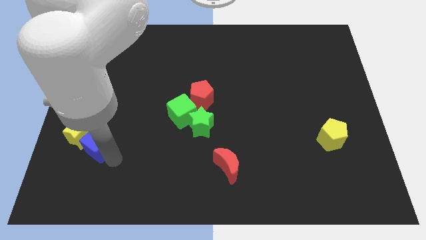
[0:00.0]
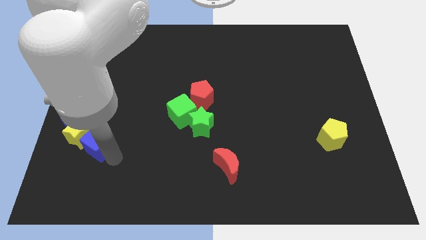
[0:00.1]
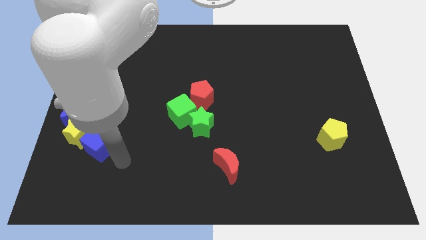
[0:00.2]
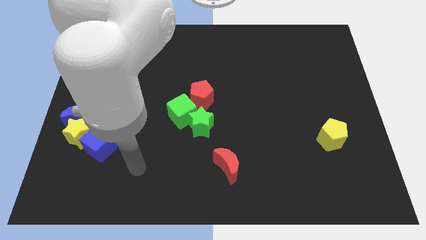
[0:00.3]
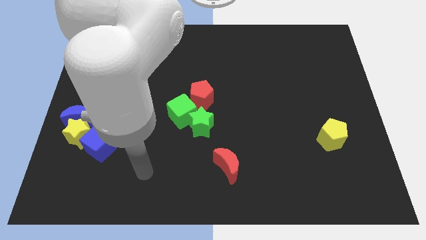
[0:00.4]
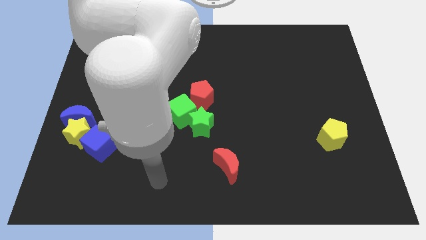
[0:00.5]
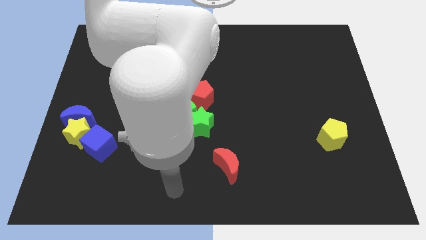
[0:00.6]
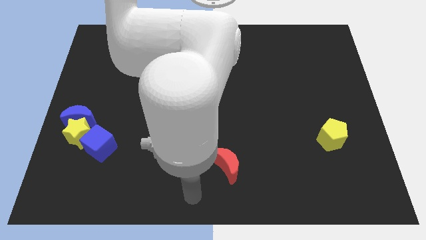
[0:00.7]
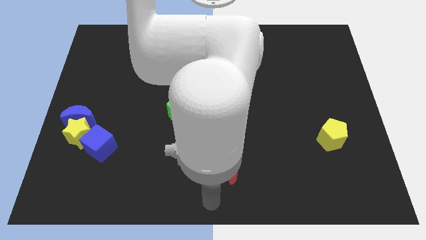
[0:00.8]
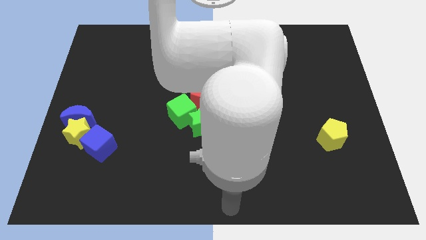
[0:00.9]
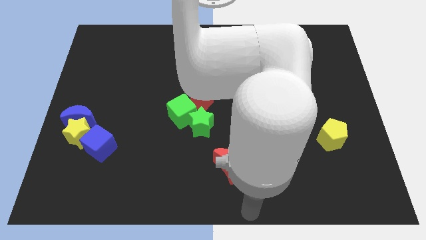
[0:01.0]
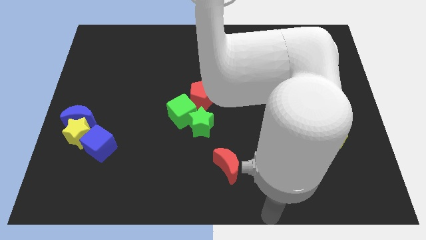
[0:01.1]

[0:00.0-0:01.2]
go away from the blue cube

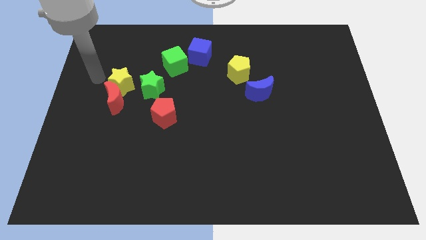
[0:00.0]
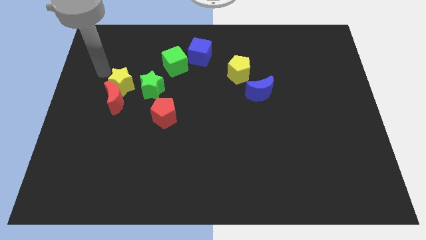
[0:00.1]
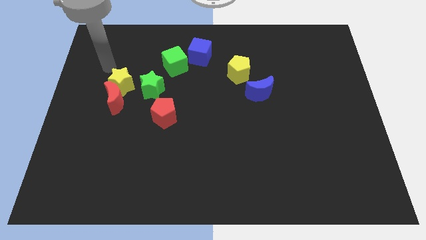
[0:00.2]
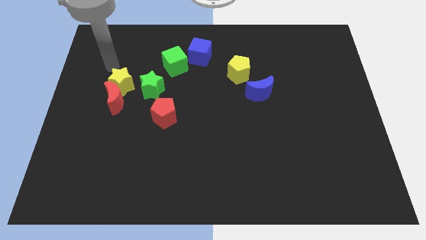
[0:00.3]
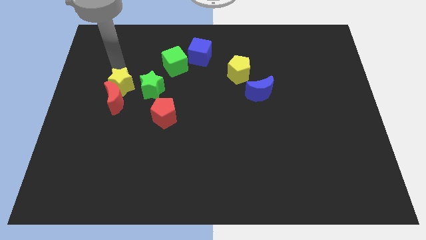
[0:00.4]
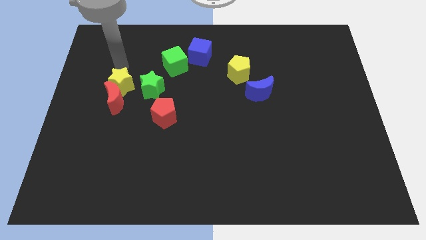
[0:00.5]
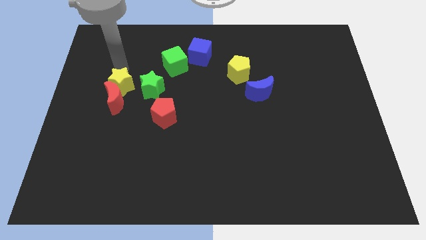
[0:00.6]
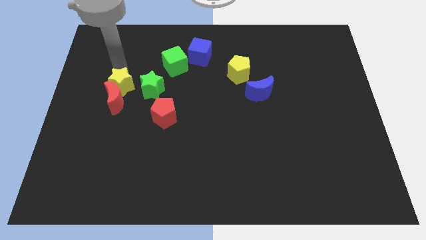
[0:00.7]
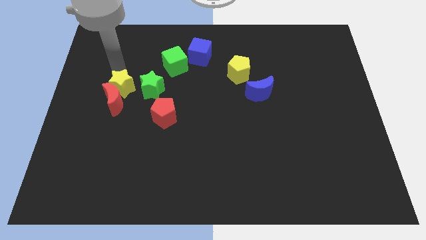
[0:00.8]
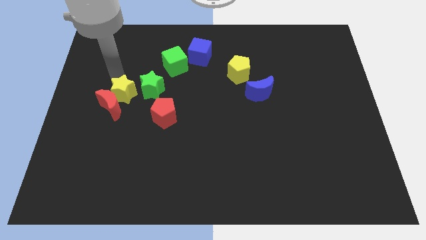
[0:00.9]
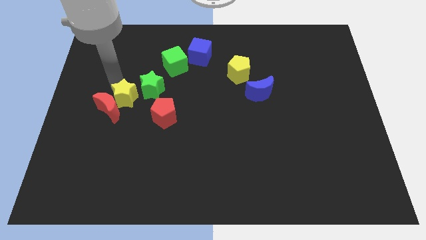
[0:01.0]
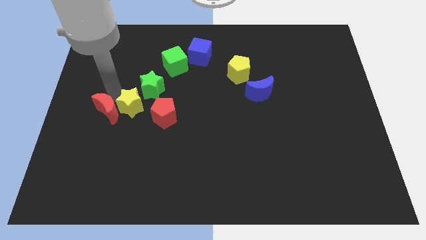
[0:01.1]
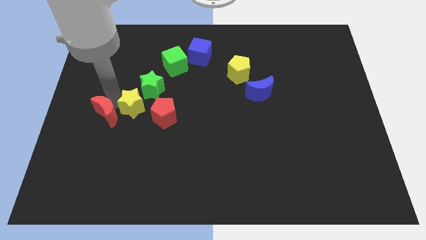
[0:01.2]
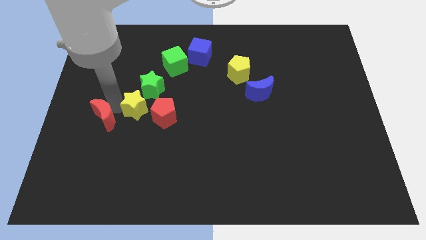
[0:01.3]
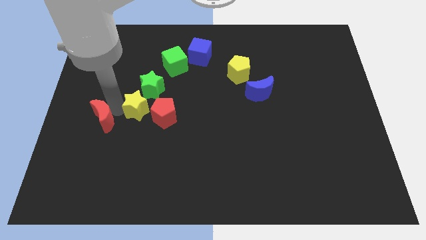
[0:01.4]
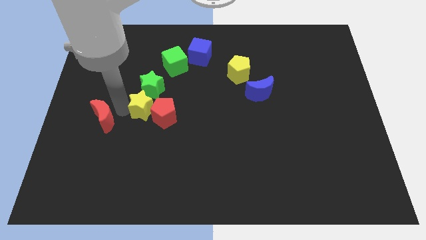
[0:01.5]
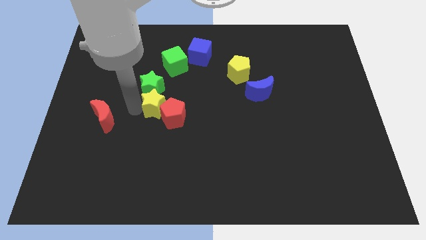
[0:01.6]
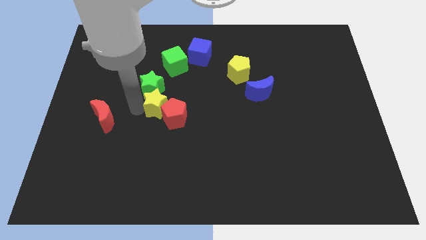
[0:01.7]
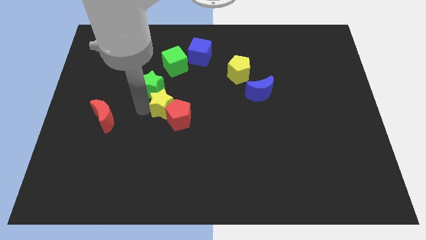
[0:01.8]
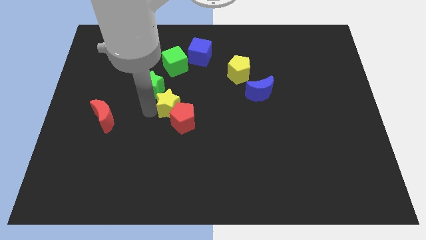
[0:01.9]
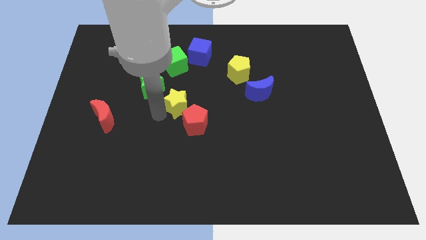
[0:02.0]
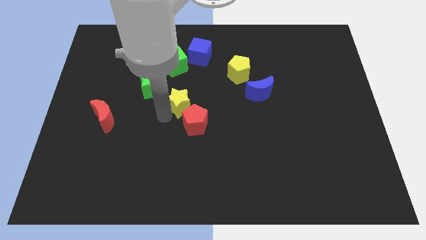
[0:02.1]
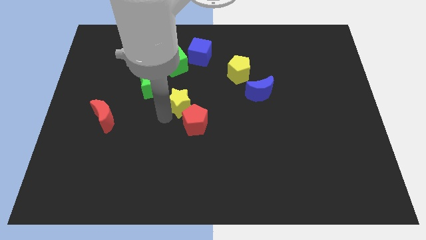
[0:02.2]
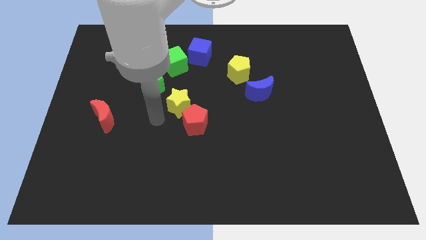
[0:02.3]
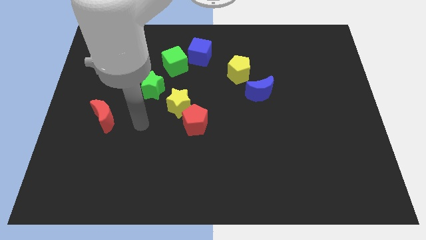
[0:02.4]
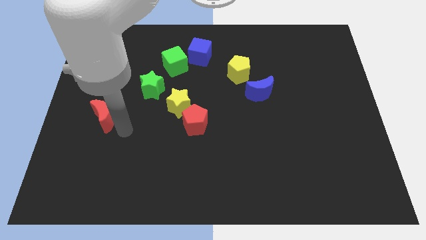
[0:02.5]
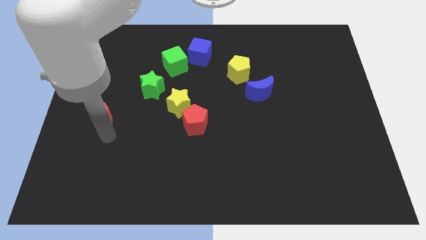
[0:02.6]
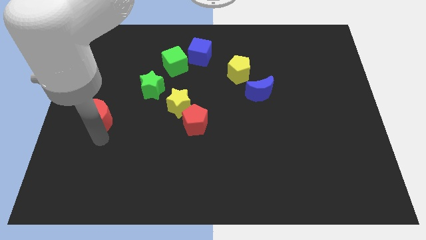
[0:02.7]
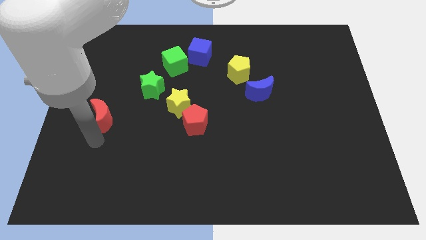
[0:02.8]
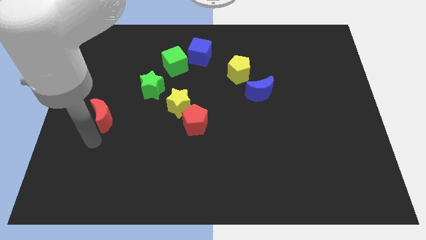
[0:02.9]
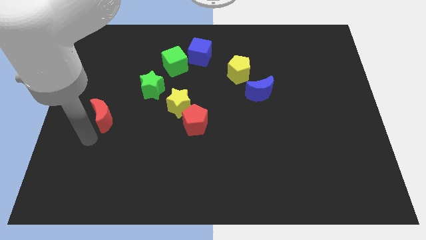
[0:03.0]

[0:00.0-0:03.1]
move yellow star in between the green star and red pentagon

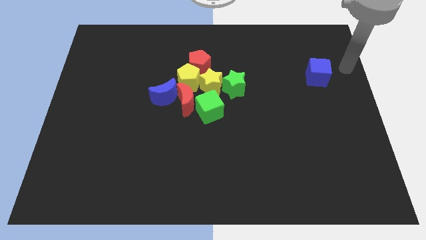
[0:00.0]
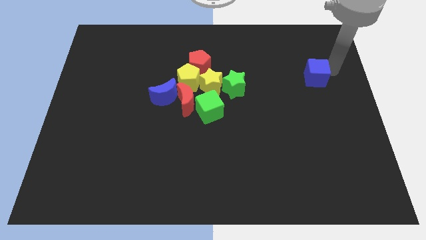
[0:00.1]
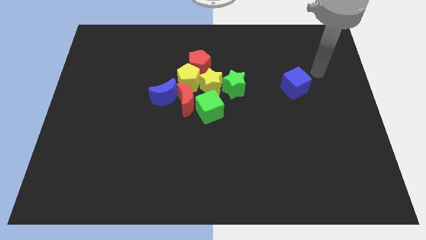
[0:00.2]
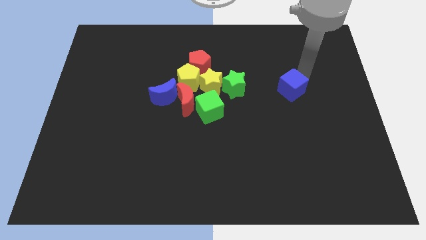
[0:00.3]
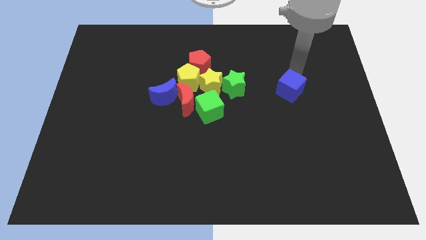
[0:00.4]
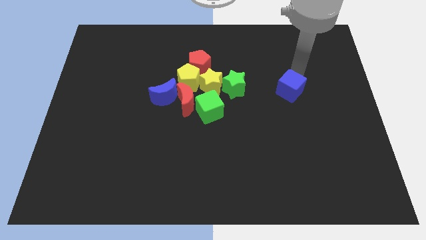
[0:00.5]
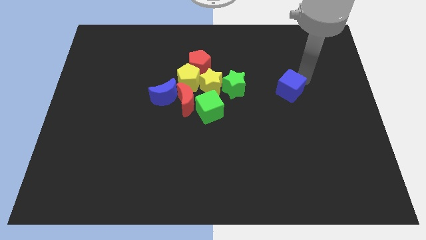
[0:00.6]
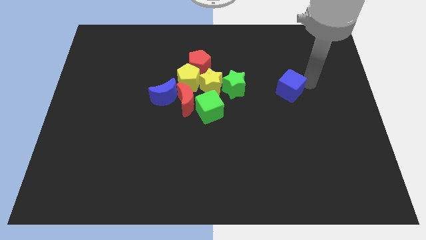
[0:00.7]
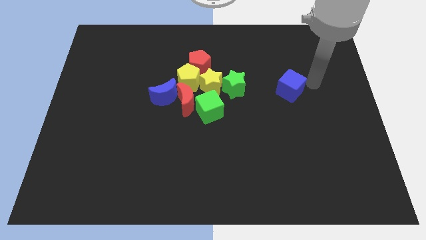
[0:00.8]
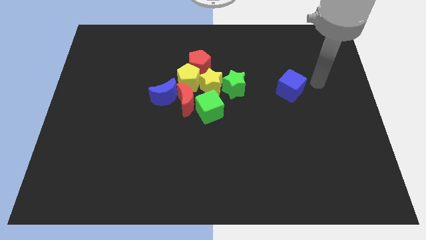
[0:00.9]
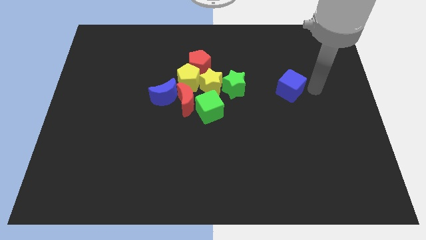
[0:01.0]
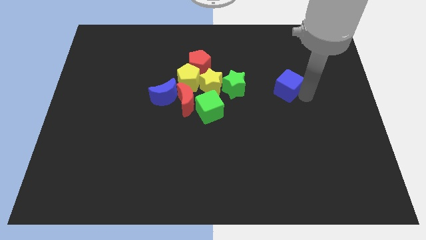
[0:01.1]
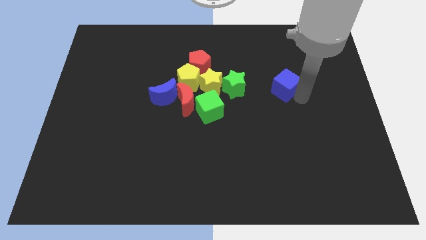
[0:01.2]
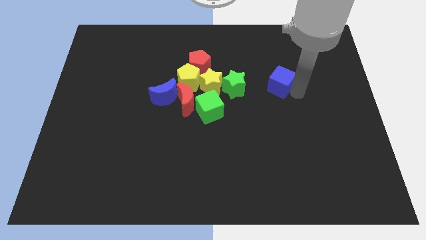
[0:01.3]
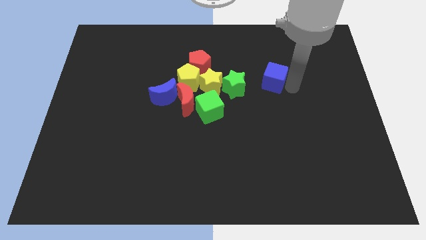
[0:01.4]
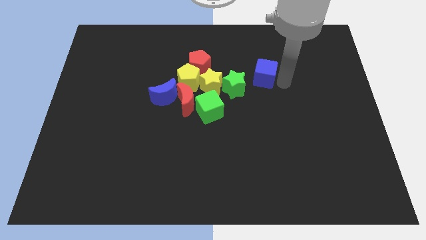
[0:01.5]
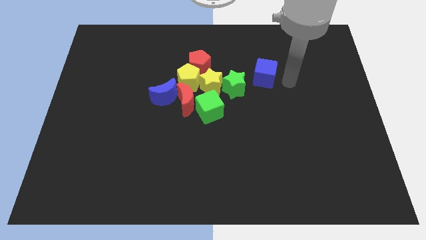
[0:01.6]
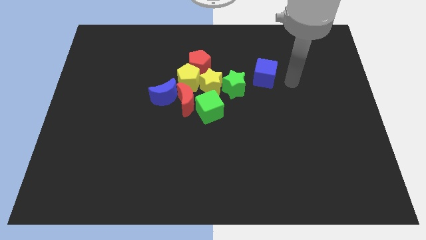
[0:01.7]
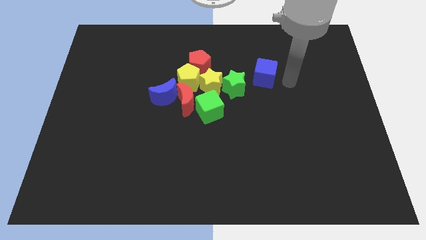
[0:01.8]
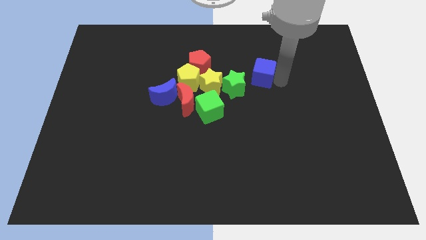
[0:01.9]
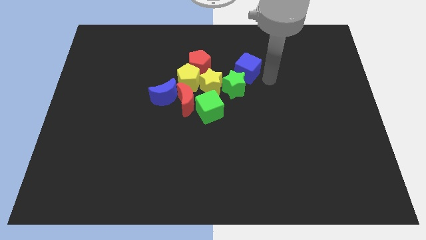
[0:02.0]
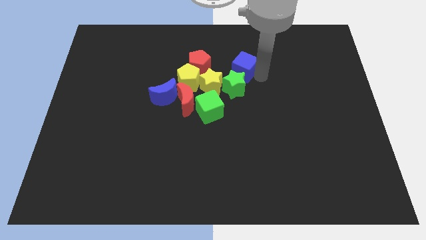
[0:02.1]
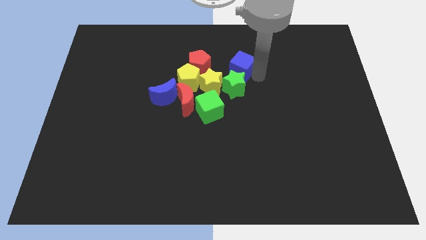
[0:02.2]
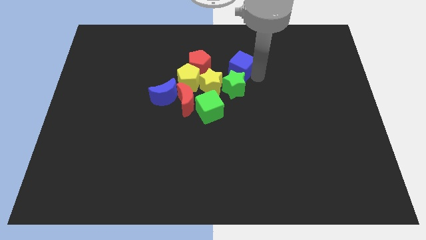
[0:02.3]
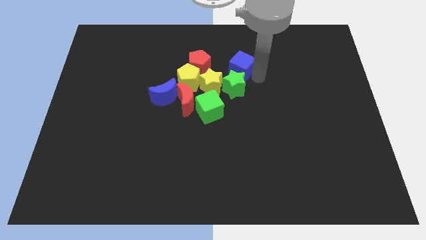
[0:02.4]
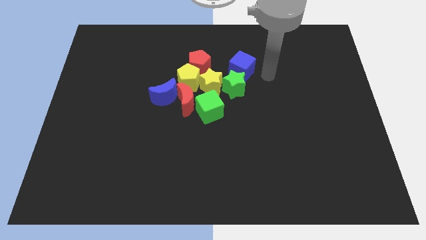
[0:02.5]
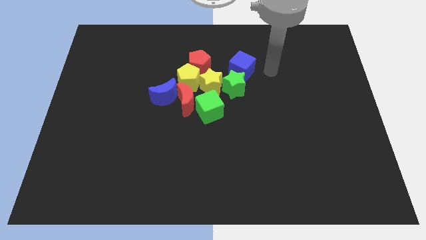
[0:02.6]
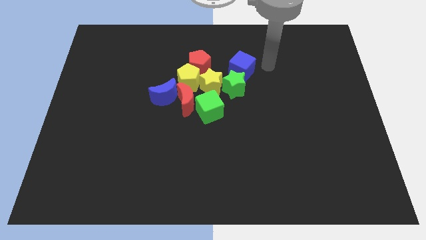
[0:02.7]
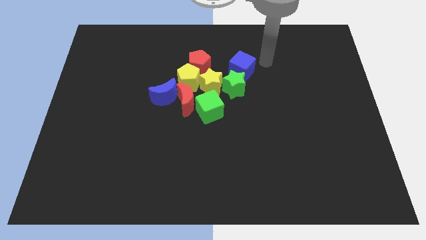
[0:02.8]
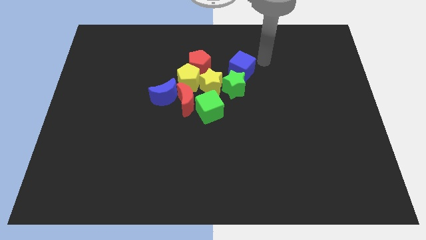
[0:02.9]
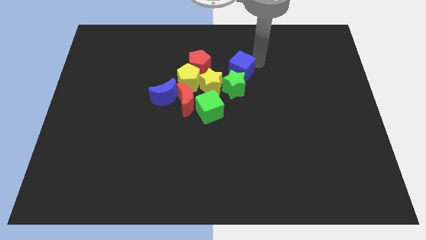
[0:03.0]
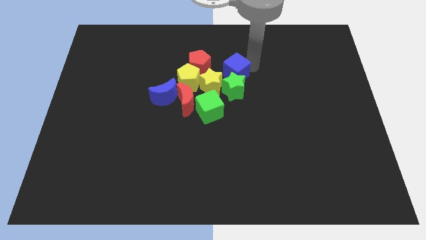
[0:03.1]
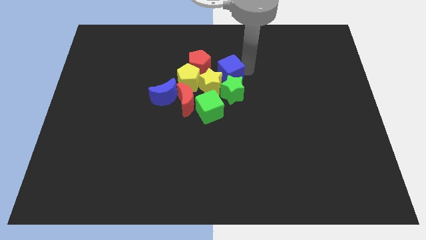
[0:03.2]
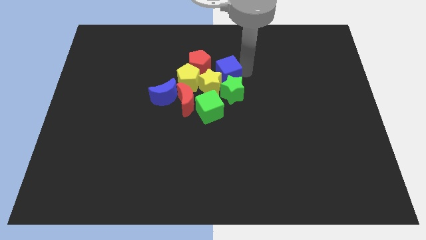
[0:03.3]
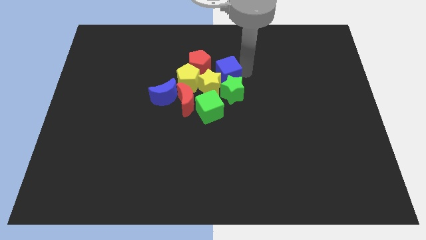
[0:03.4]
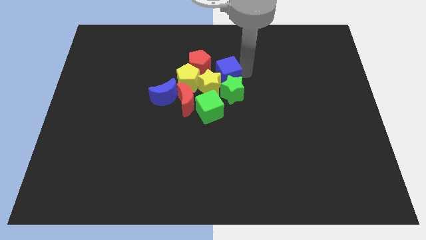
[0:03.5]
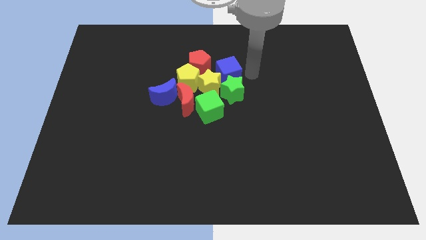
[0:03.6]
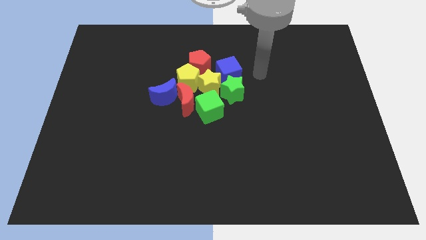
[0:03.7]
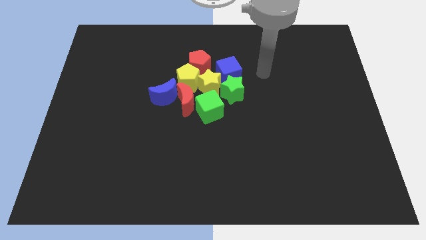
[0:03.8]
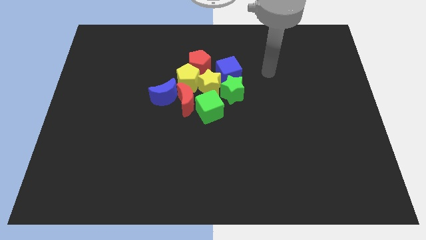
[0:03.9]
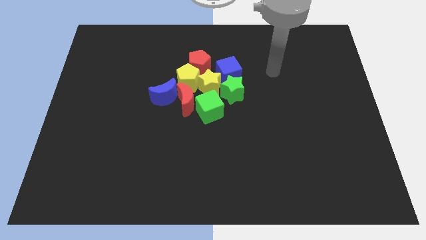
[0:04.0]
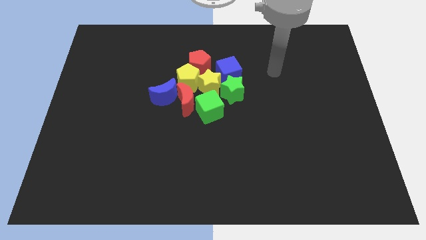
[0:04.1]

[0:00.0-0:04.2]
move the blue cube above the green star

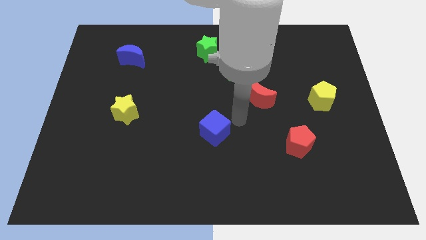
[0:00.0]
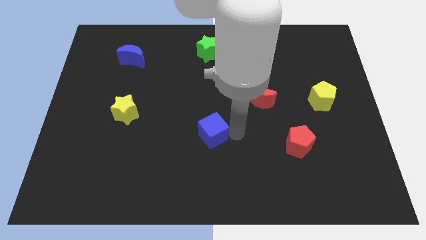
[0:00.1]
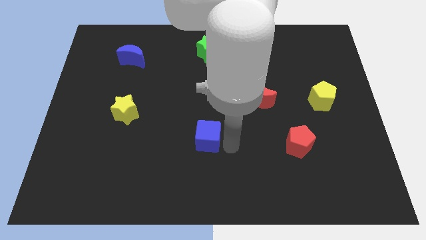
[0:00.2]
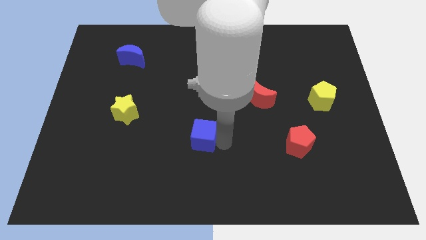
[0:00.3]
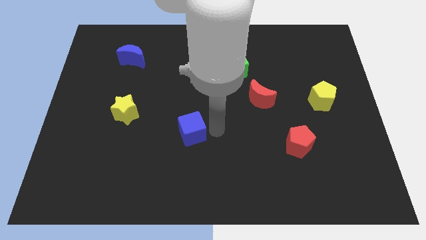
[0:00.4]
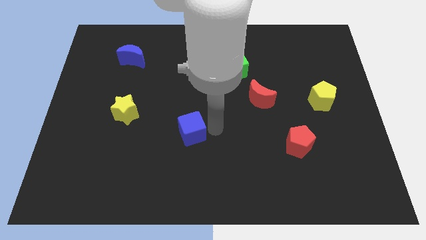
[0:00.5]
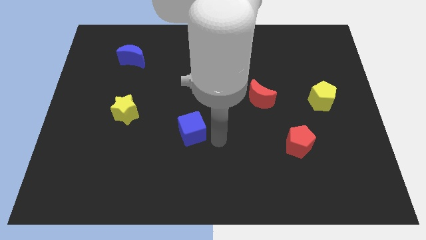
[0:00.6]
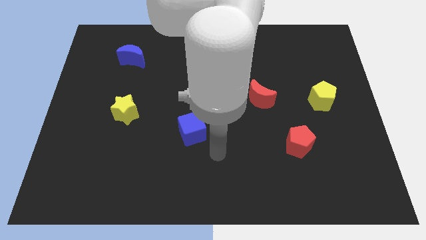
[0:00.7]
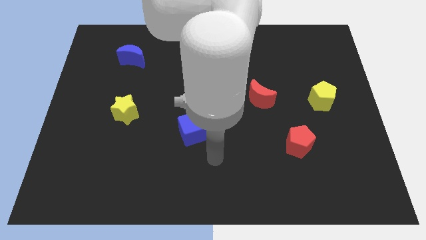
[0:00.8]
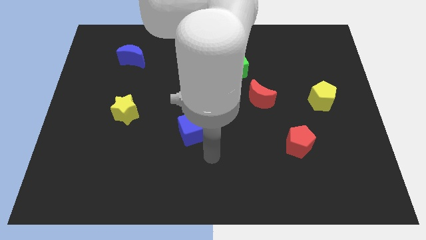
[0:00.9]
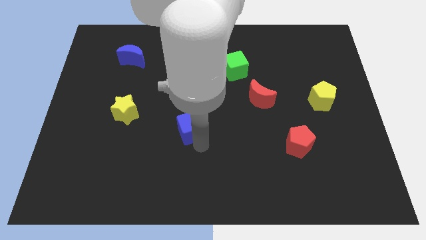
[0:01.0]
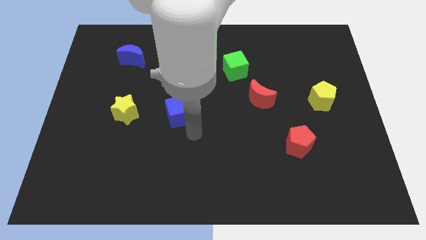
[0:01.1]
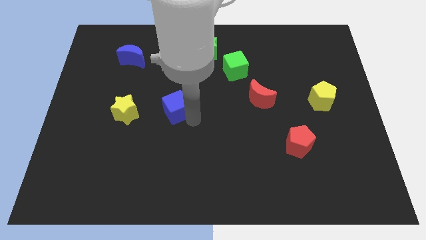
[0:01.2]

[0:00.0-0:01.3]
slide the blue cube parallel right to the yellow star
